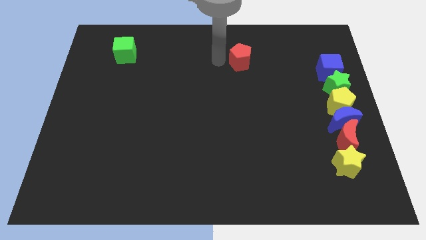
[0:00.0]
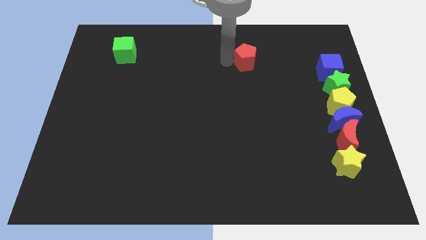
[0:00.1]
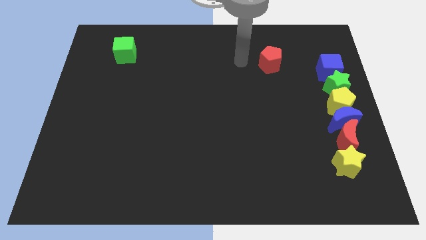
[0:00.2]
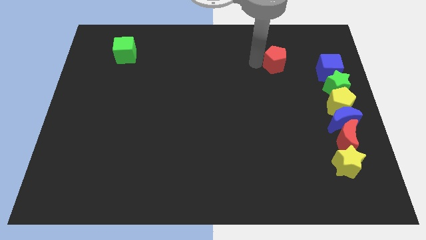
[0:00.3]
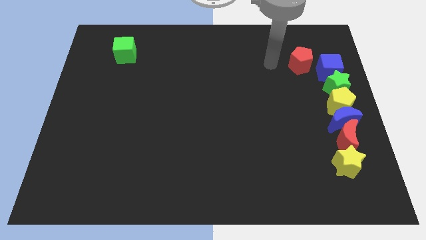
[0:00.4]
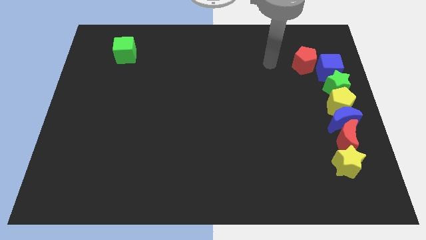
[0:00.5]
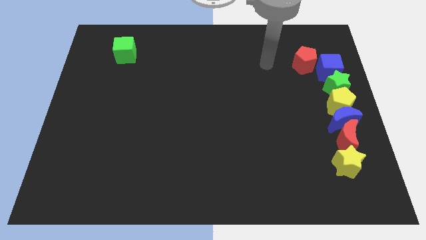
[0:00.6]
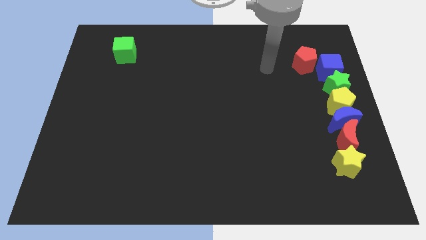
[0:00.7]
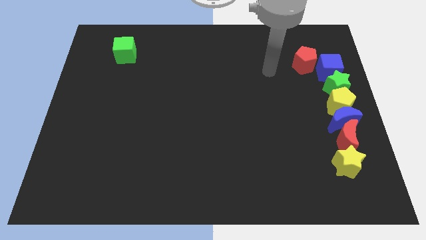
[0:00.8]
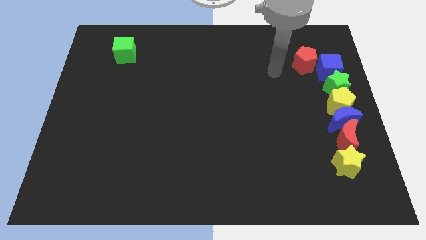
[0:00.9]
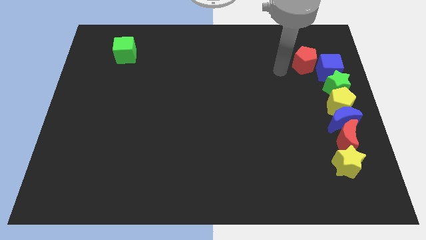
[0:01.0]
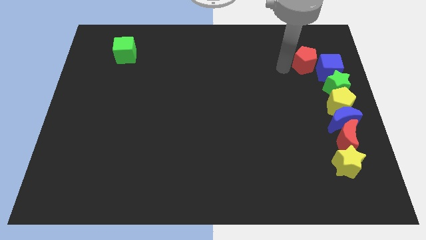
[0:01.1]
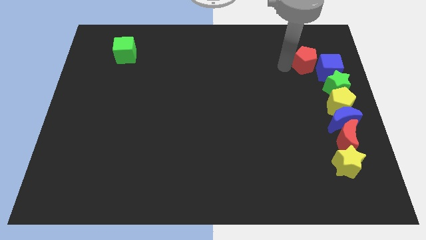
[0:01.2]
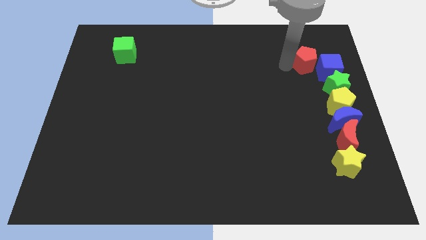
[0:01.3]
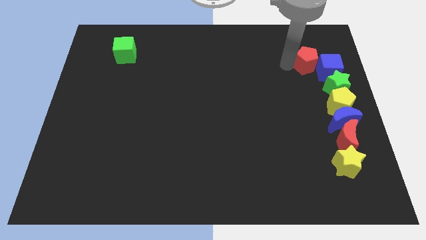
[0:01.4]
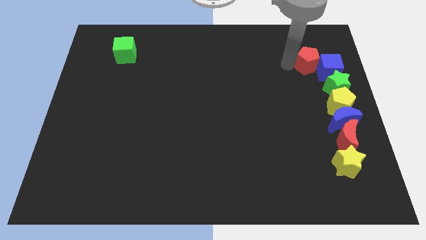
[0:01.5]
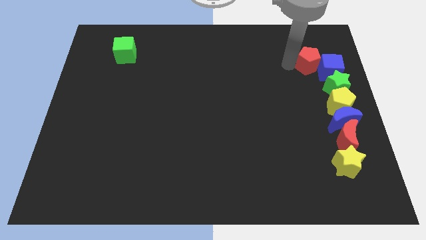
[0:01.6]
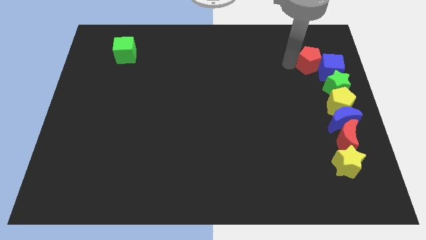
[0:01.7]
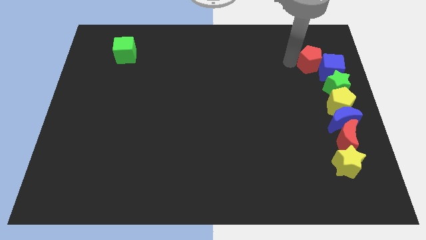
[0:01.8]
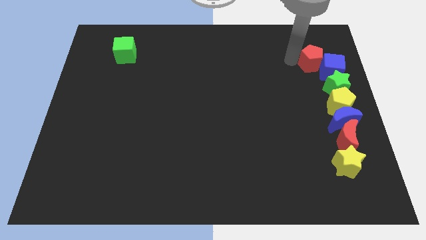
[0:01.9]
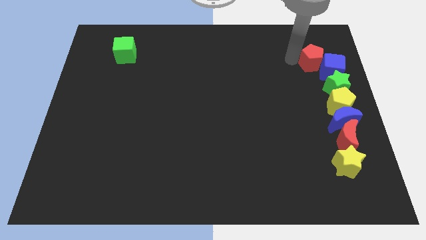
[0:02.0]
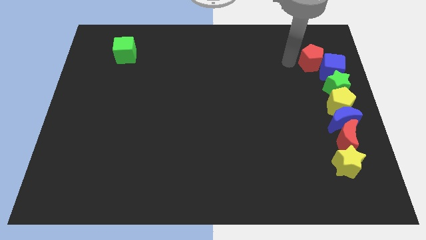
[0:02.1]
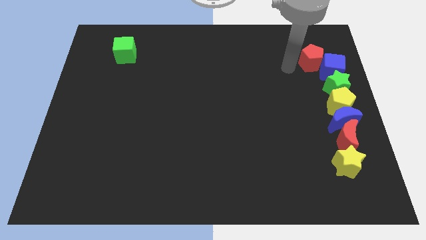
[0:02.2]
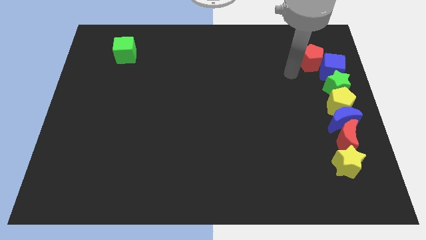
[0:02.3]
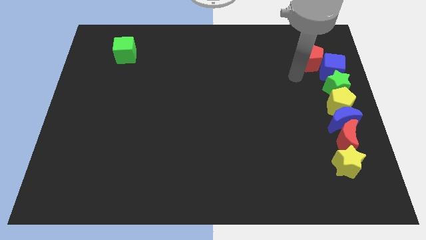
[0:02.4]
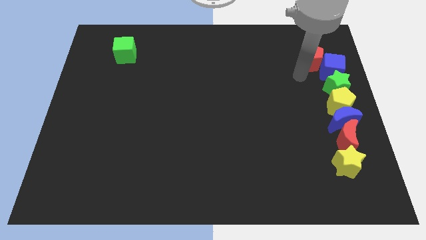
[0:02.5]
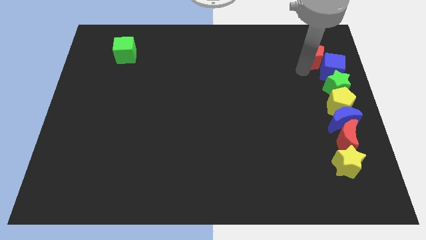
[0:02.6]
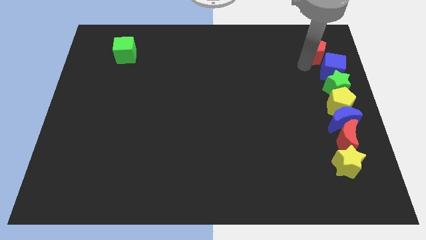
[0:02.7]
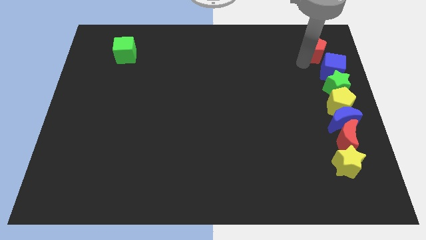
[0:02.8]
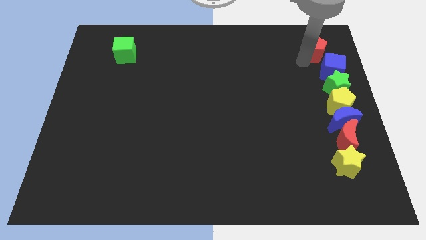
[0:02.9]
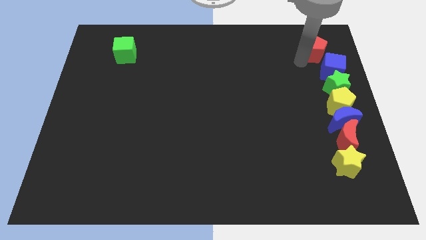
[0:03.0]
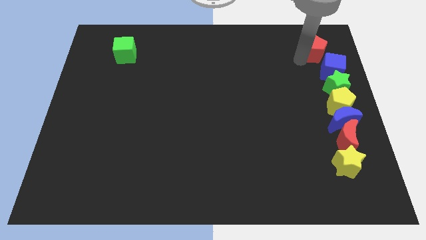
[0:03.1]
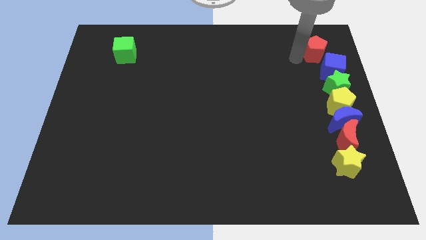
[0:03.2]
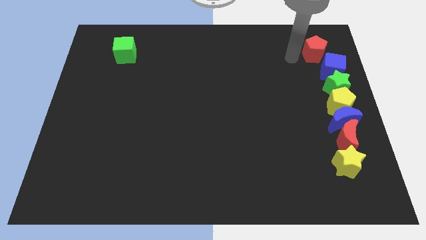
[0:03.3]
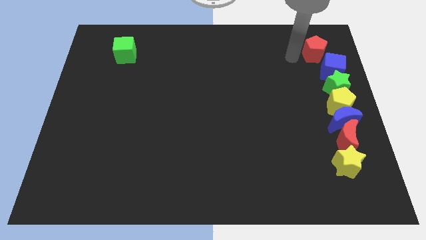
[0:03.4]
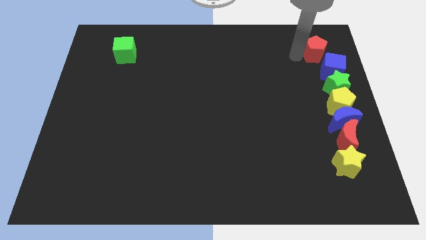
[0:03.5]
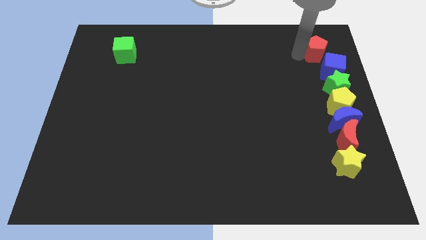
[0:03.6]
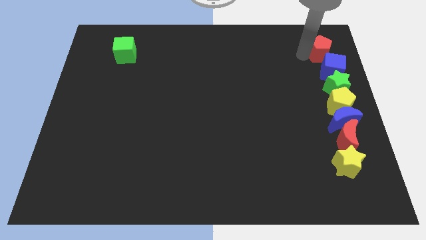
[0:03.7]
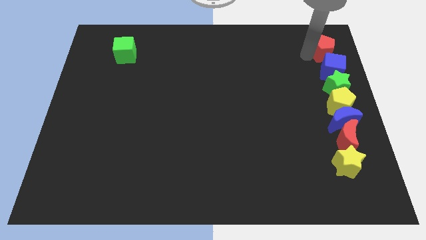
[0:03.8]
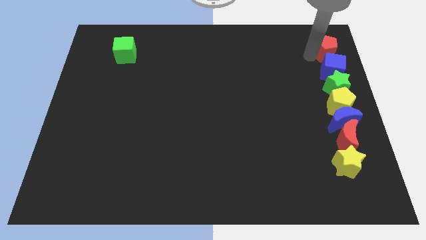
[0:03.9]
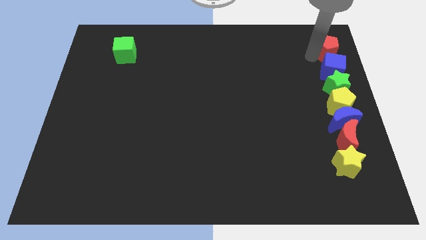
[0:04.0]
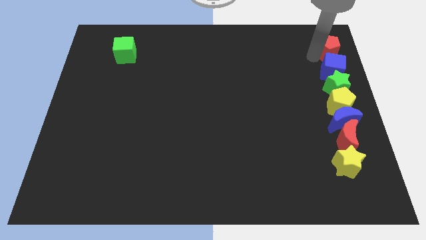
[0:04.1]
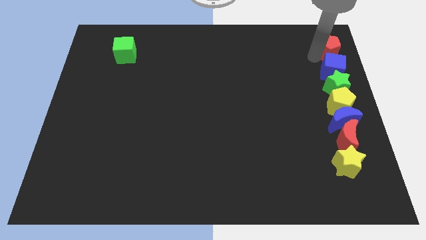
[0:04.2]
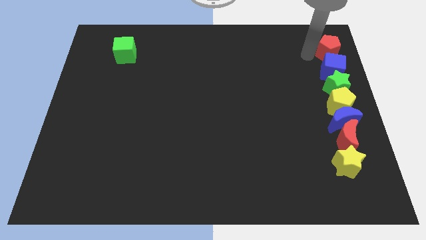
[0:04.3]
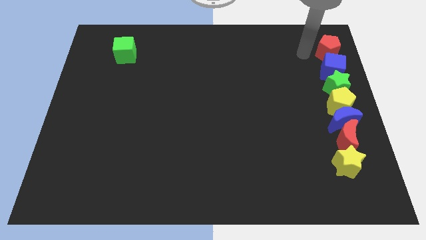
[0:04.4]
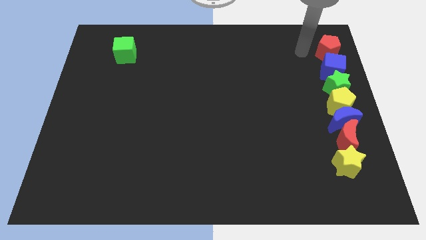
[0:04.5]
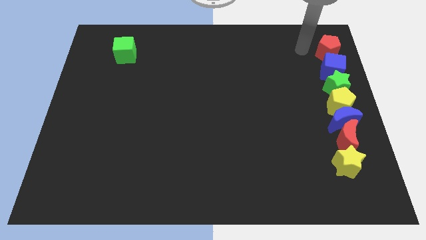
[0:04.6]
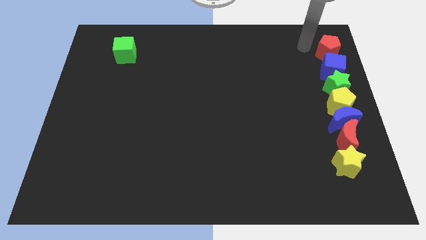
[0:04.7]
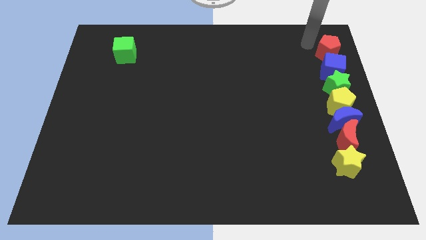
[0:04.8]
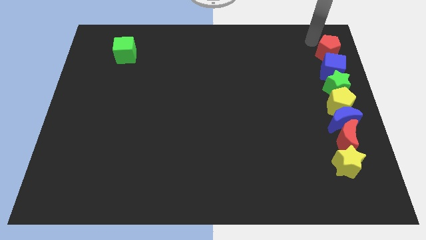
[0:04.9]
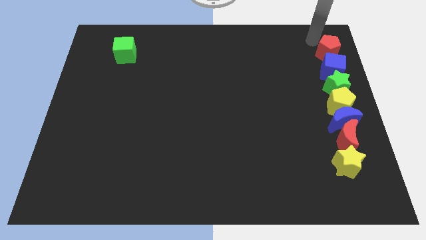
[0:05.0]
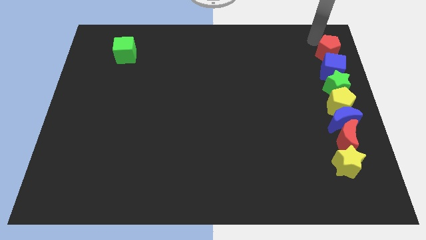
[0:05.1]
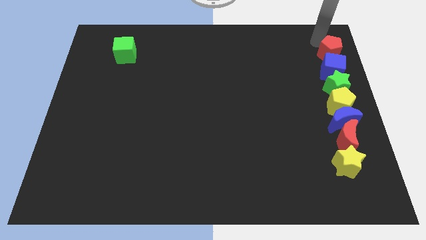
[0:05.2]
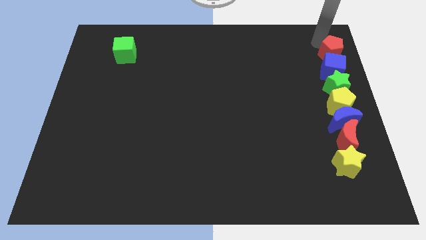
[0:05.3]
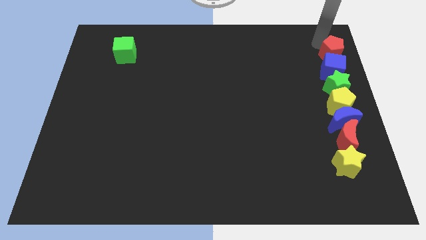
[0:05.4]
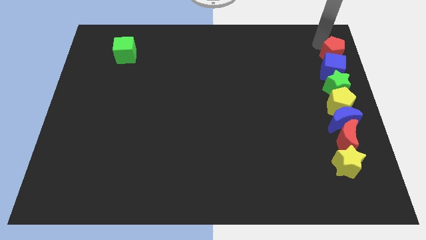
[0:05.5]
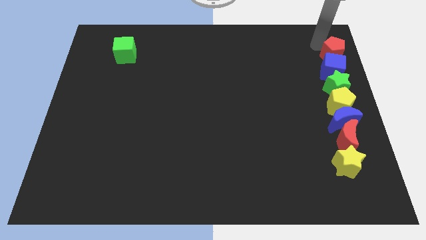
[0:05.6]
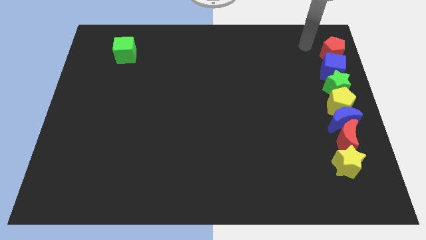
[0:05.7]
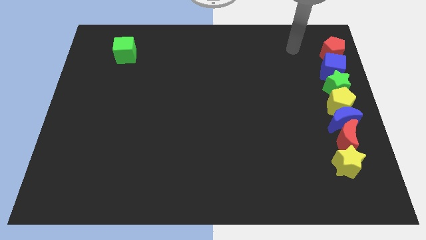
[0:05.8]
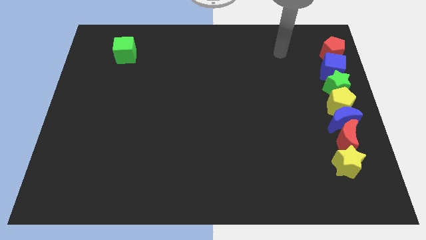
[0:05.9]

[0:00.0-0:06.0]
place the red pentagon above the blue cube

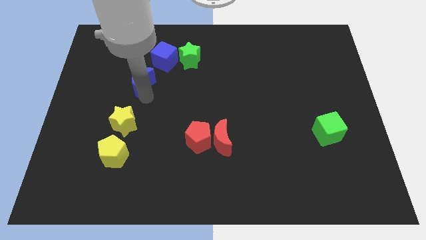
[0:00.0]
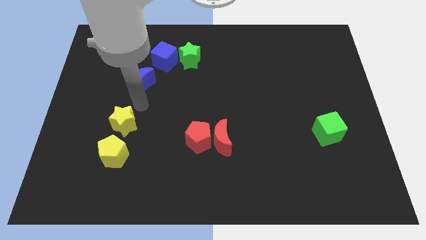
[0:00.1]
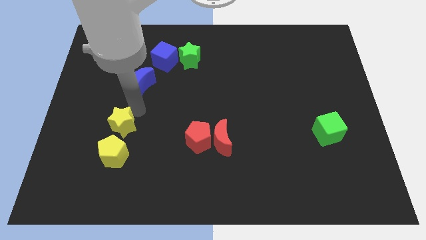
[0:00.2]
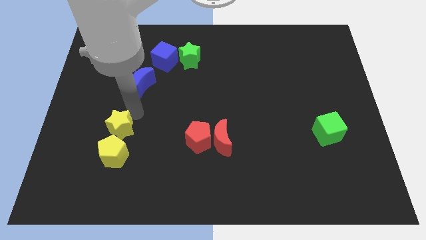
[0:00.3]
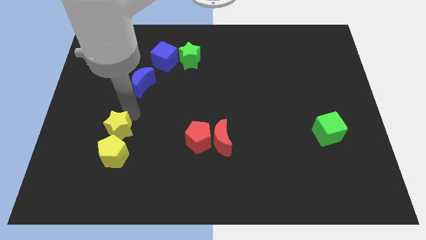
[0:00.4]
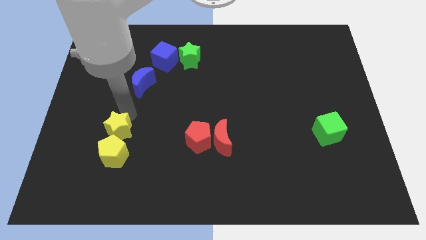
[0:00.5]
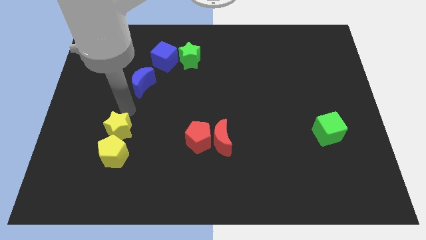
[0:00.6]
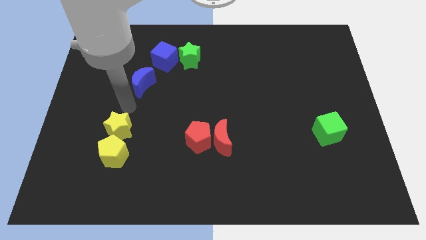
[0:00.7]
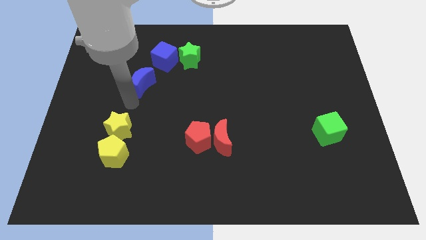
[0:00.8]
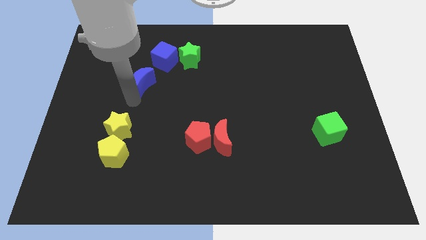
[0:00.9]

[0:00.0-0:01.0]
adjust the yellow star at the top of yellow pentagon

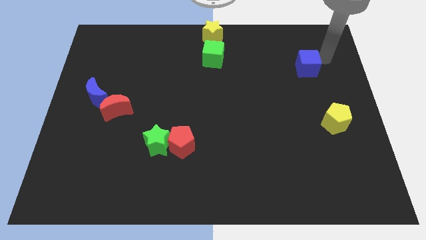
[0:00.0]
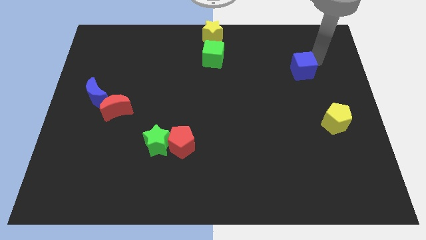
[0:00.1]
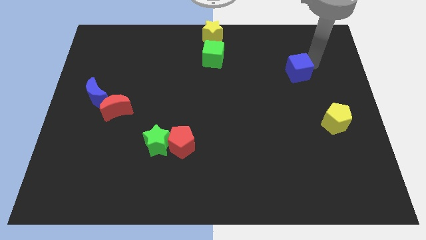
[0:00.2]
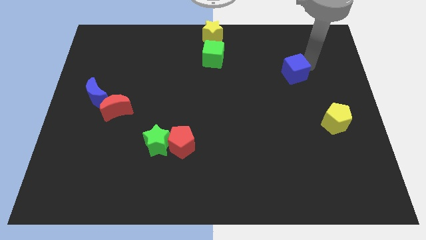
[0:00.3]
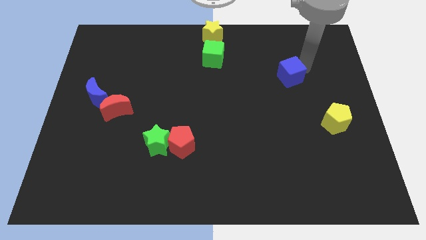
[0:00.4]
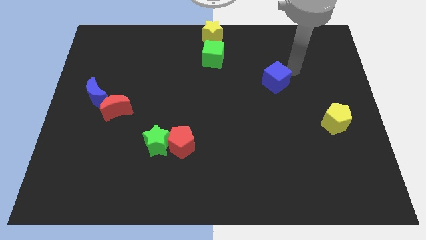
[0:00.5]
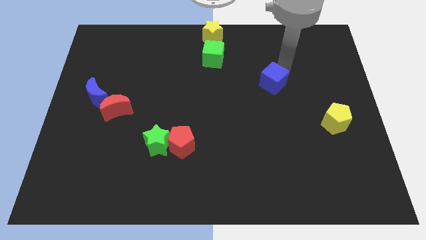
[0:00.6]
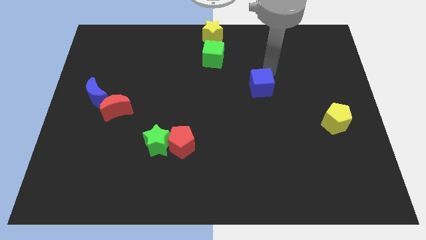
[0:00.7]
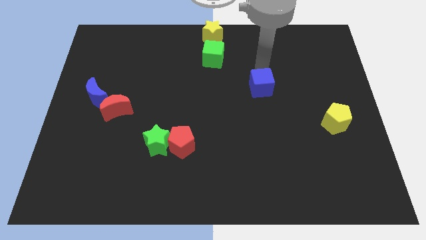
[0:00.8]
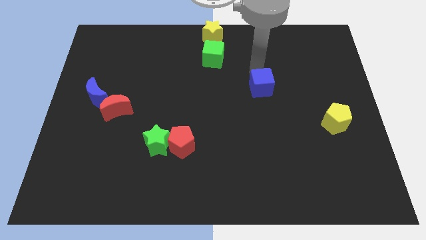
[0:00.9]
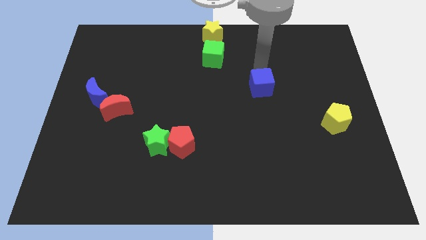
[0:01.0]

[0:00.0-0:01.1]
place the blue cube diagonally to the yellow pentagon

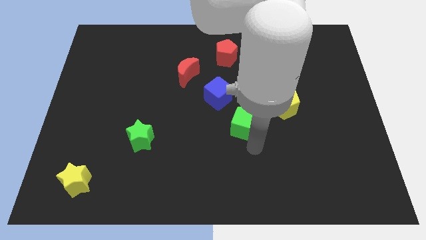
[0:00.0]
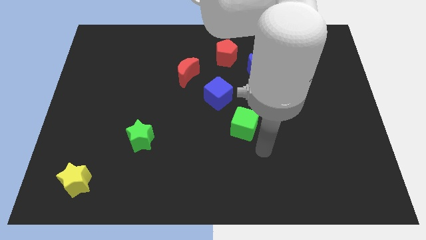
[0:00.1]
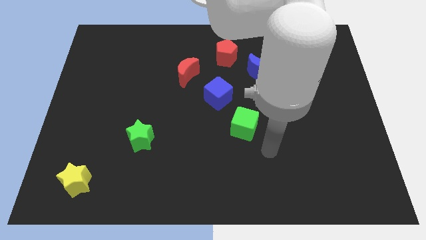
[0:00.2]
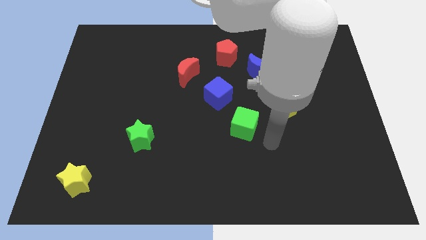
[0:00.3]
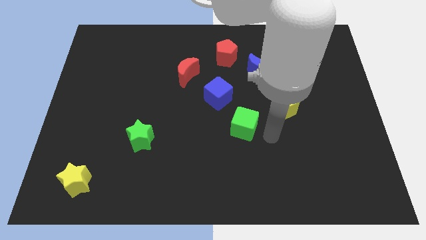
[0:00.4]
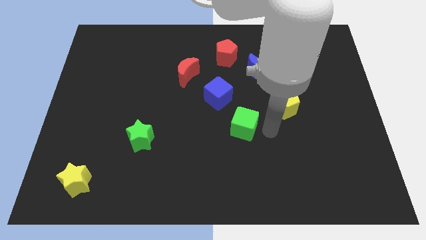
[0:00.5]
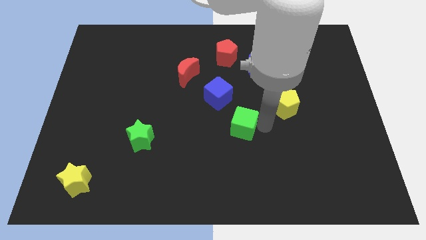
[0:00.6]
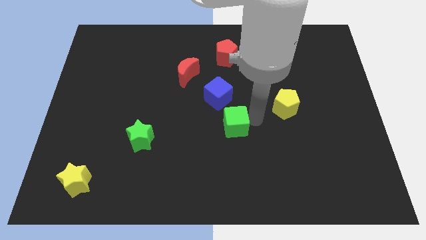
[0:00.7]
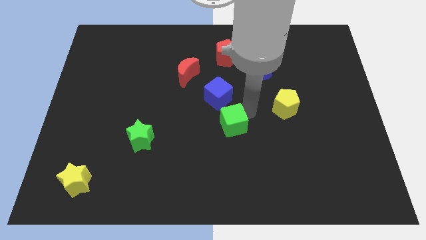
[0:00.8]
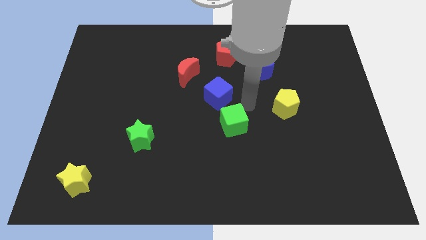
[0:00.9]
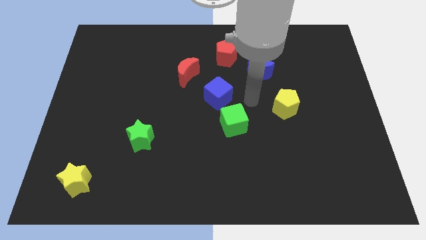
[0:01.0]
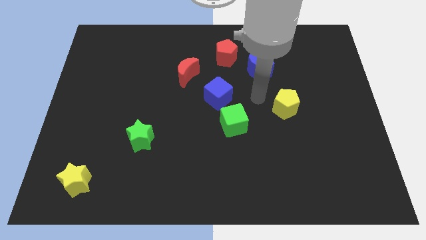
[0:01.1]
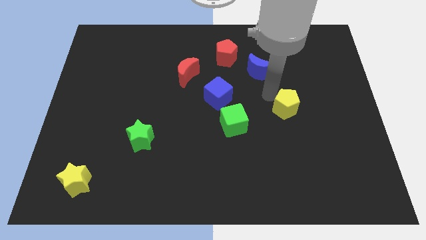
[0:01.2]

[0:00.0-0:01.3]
place the green cube below the blue cube
